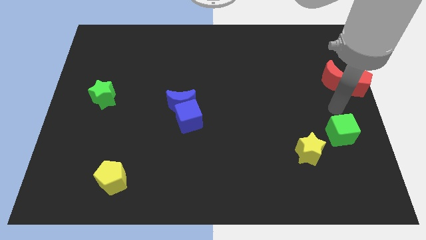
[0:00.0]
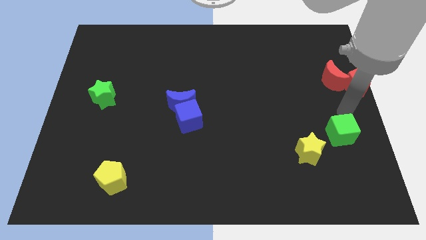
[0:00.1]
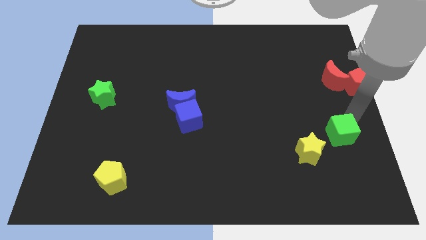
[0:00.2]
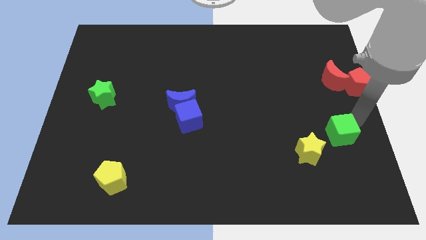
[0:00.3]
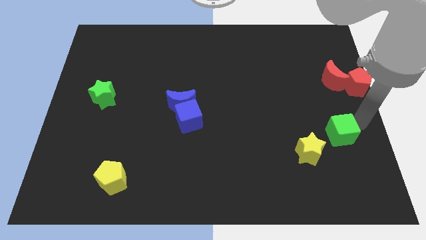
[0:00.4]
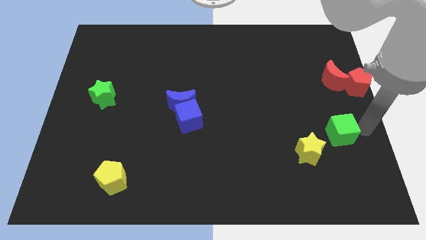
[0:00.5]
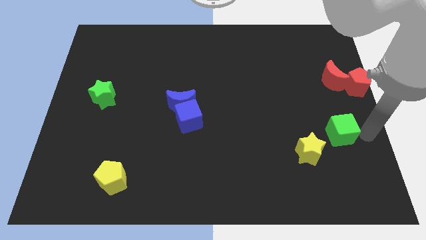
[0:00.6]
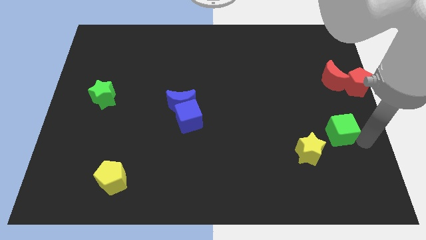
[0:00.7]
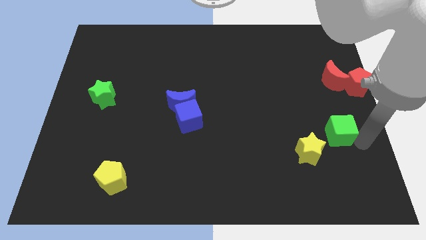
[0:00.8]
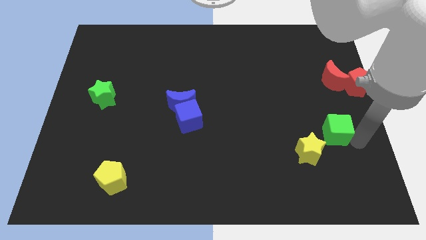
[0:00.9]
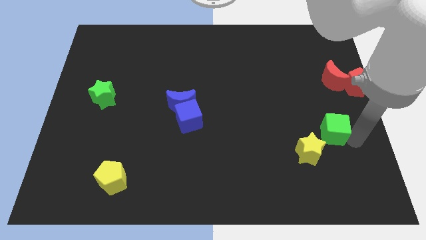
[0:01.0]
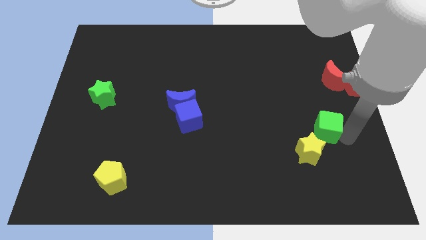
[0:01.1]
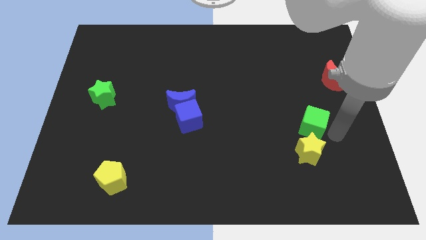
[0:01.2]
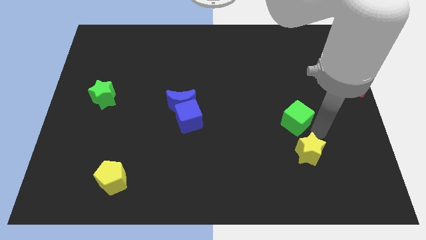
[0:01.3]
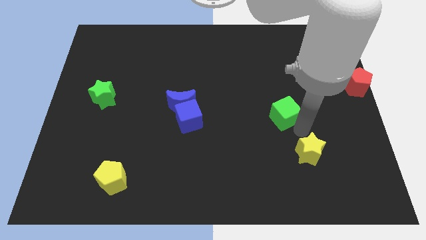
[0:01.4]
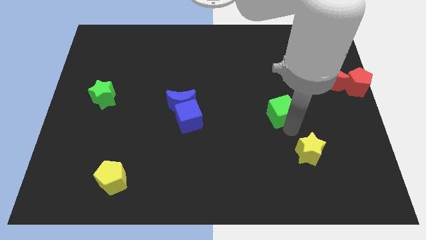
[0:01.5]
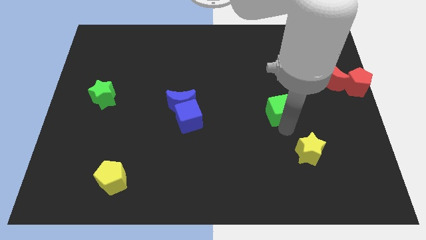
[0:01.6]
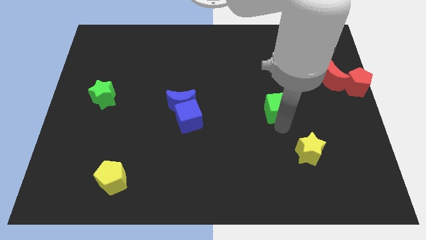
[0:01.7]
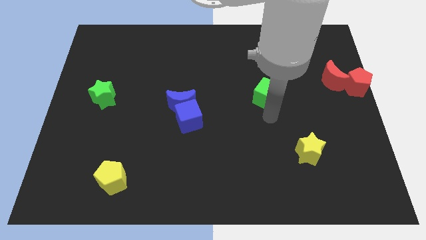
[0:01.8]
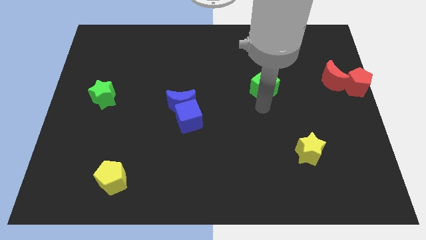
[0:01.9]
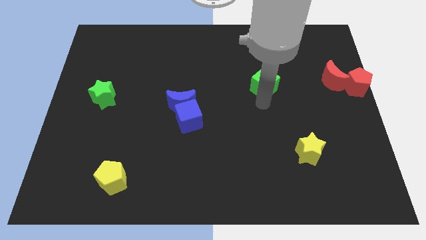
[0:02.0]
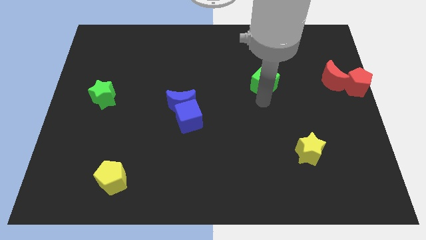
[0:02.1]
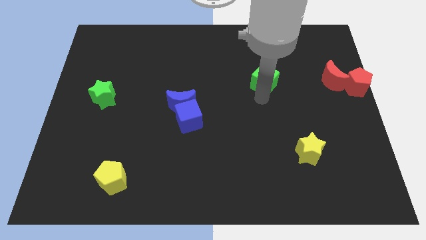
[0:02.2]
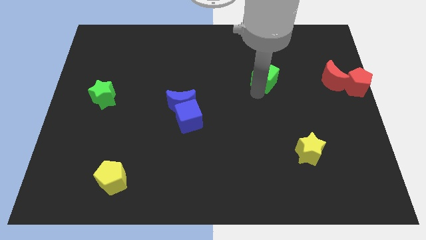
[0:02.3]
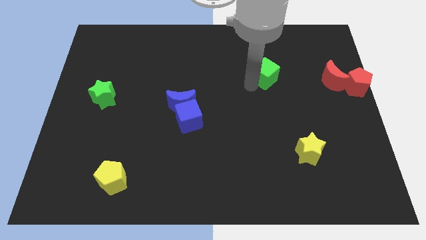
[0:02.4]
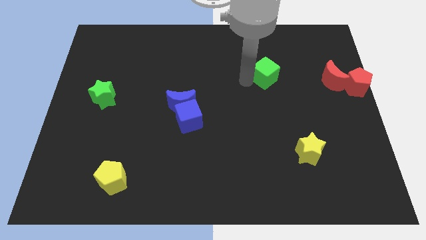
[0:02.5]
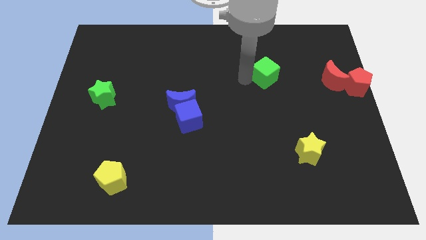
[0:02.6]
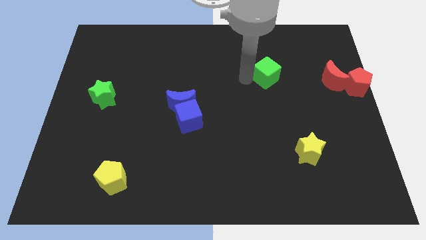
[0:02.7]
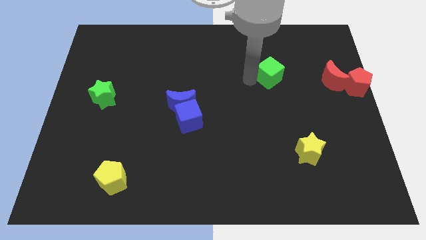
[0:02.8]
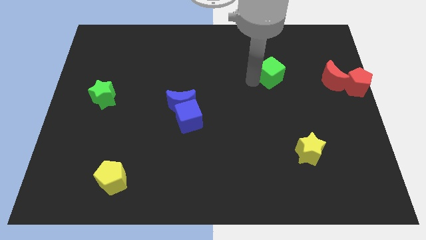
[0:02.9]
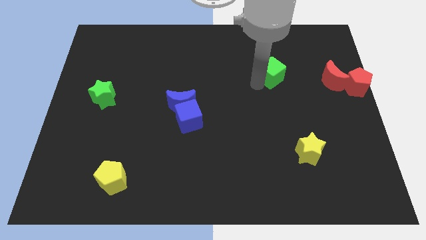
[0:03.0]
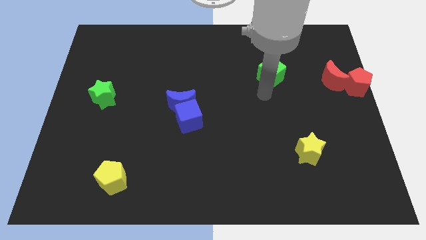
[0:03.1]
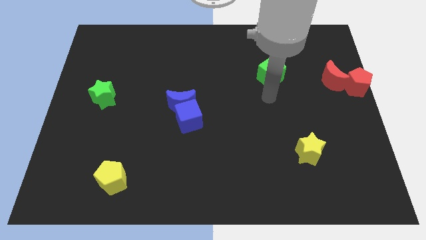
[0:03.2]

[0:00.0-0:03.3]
move the green cube parallel to the red crescent

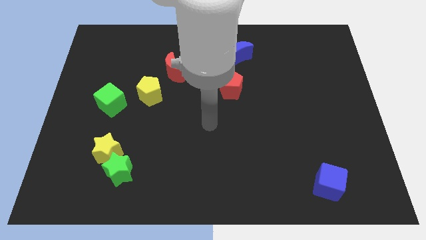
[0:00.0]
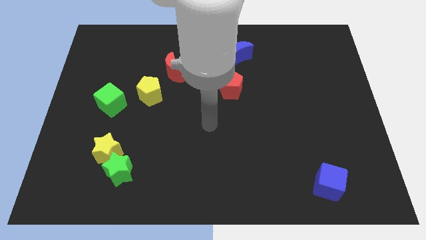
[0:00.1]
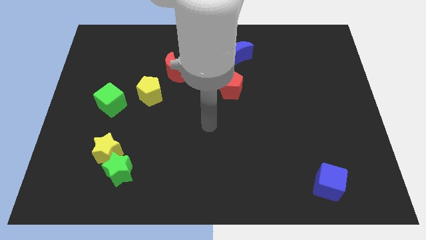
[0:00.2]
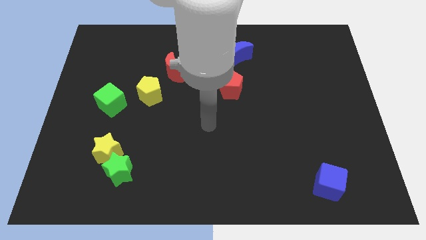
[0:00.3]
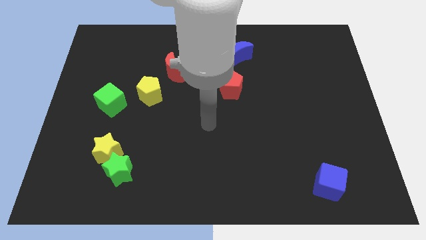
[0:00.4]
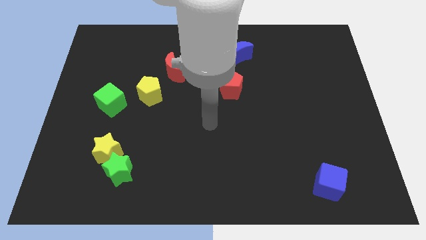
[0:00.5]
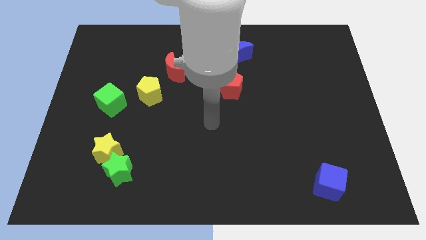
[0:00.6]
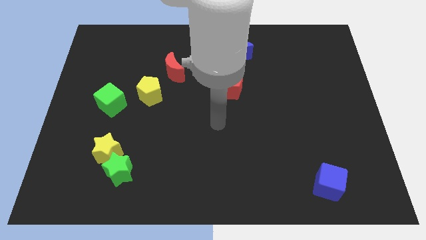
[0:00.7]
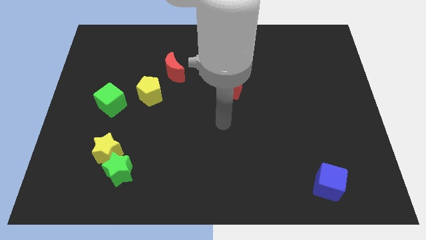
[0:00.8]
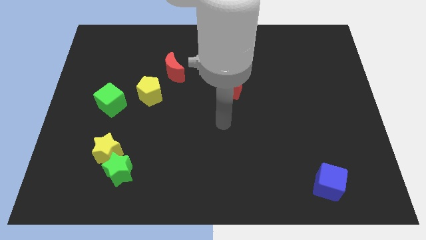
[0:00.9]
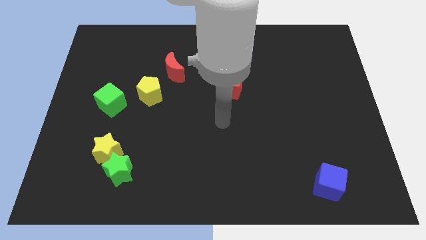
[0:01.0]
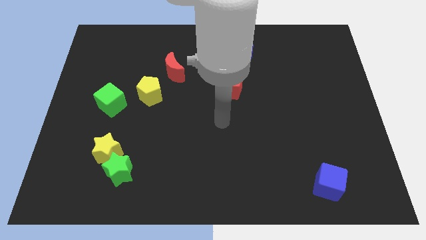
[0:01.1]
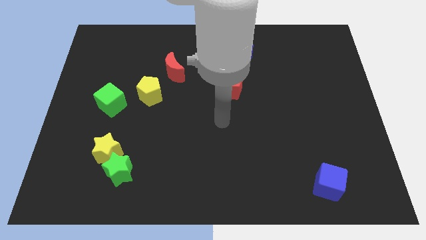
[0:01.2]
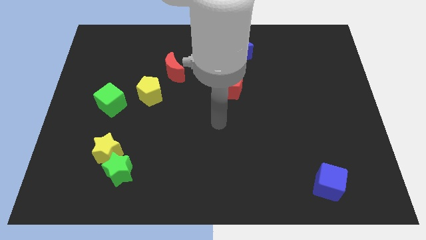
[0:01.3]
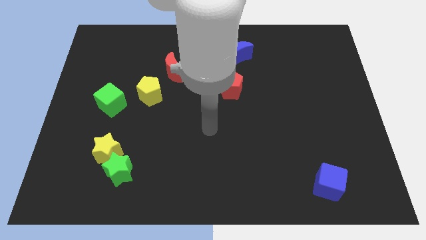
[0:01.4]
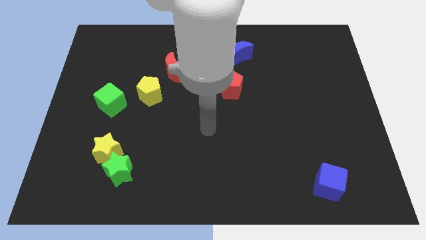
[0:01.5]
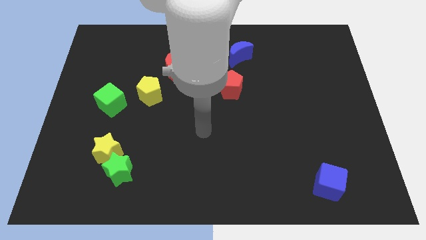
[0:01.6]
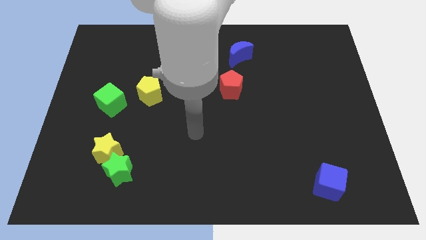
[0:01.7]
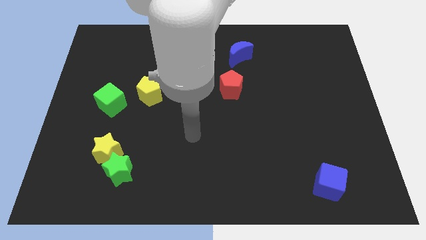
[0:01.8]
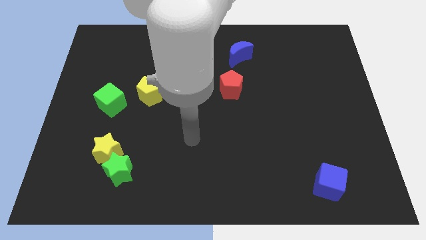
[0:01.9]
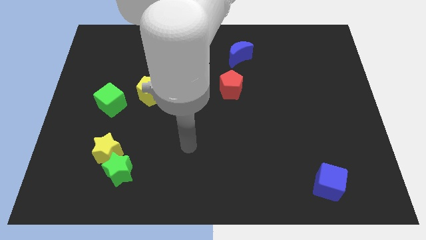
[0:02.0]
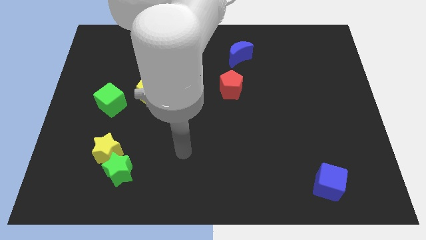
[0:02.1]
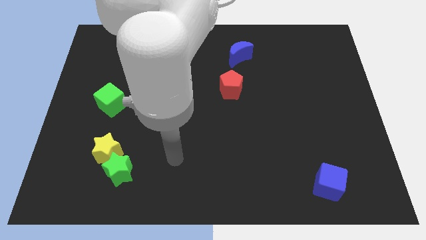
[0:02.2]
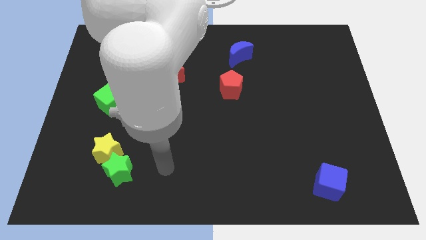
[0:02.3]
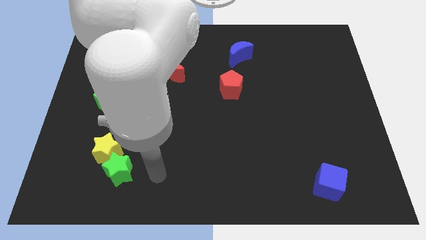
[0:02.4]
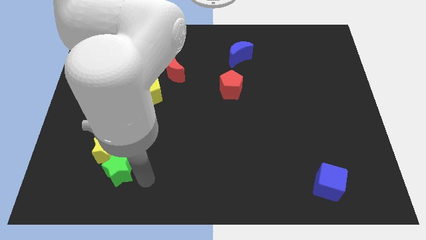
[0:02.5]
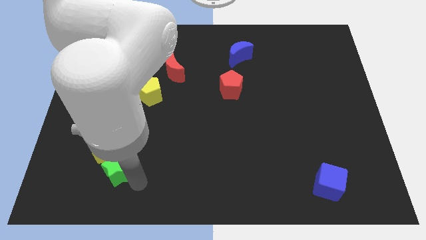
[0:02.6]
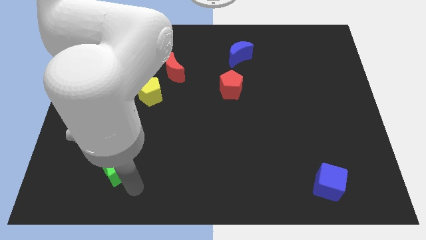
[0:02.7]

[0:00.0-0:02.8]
go near the green star

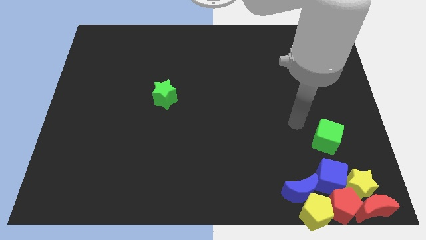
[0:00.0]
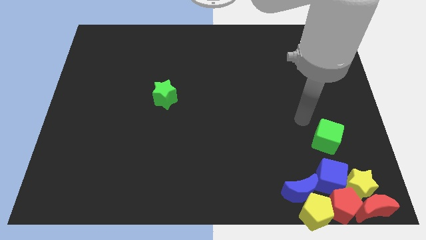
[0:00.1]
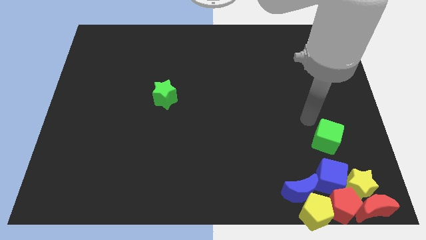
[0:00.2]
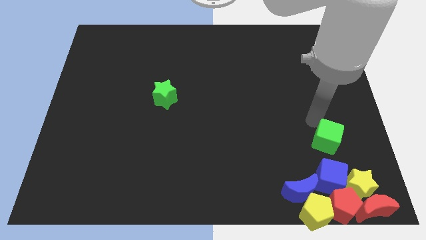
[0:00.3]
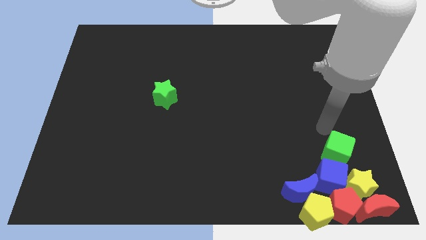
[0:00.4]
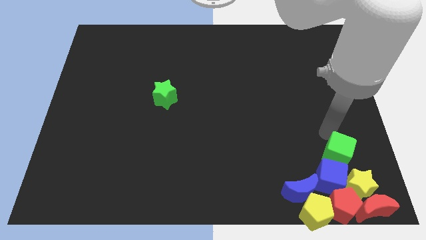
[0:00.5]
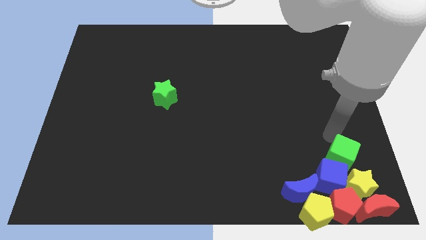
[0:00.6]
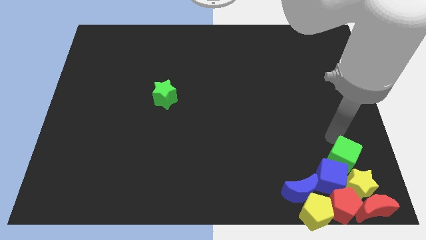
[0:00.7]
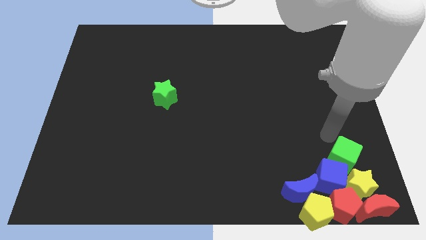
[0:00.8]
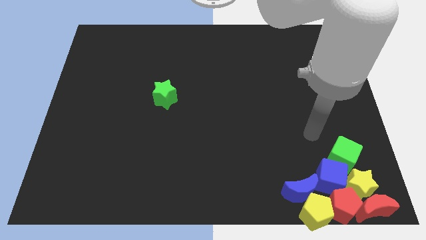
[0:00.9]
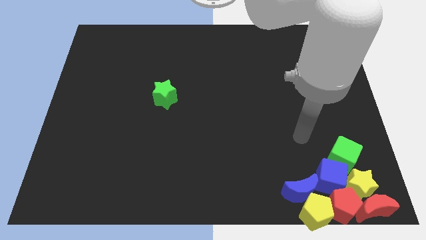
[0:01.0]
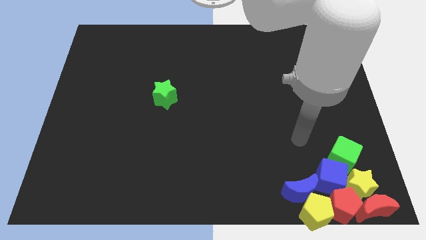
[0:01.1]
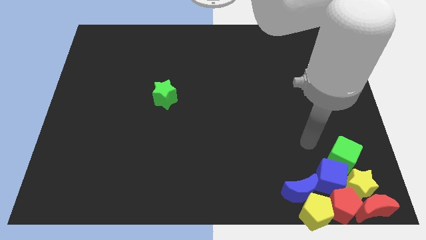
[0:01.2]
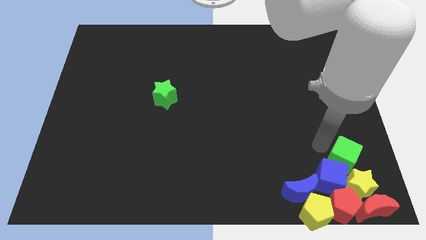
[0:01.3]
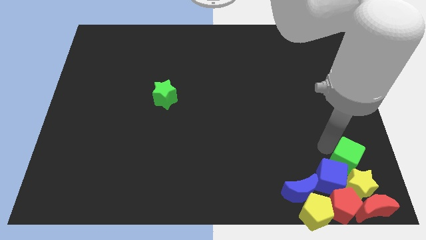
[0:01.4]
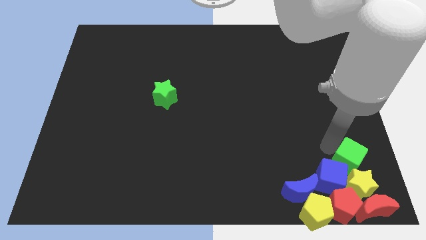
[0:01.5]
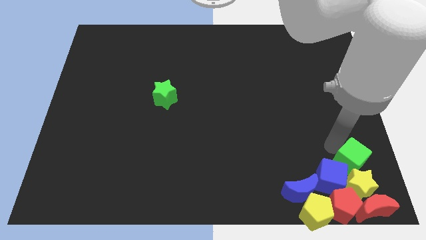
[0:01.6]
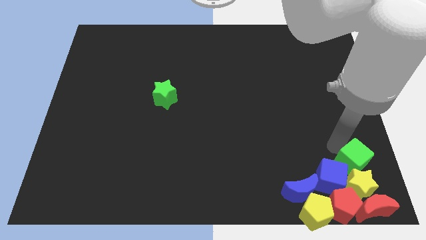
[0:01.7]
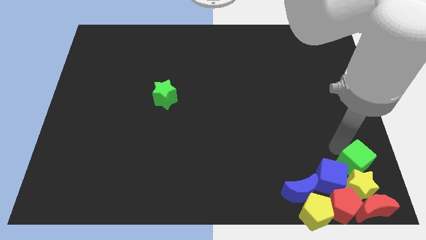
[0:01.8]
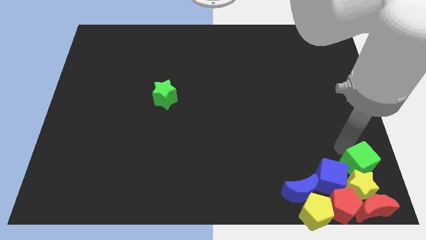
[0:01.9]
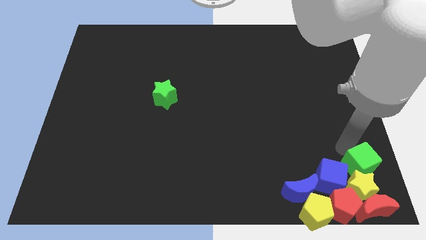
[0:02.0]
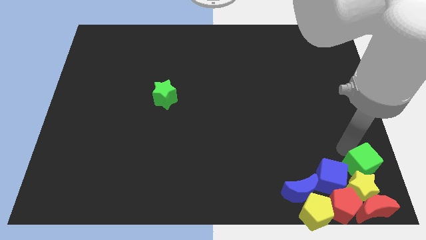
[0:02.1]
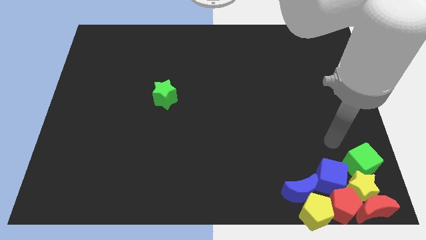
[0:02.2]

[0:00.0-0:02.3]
move the green cube into the yellow star

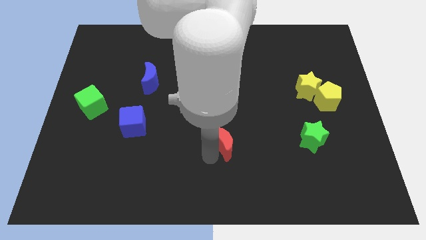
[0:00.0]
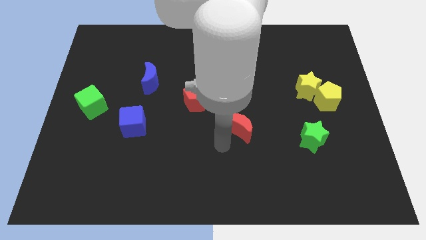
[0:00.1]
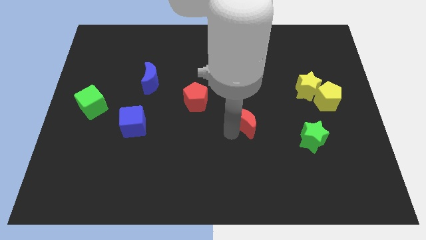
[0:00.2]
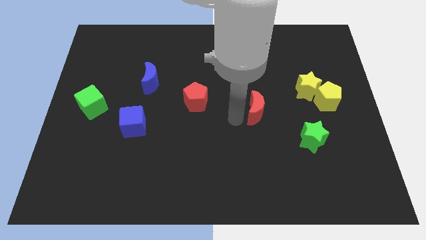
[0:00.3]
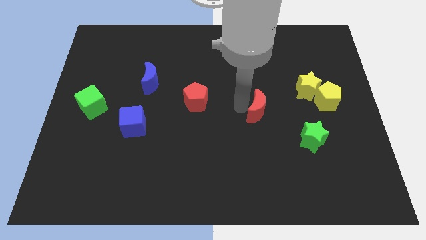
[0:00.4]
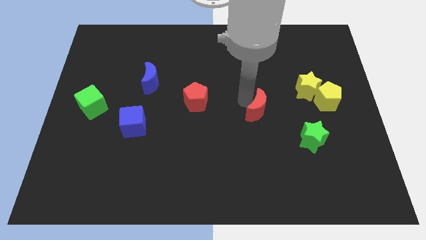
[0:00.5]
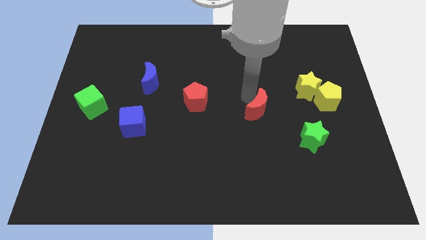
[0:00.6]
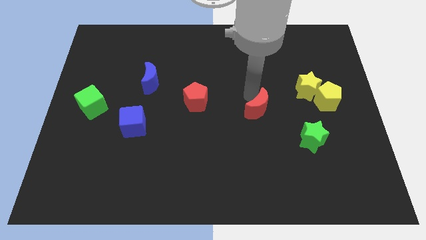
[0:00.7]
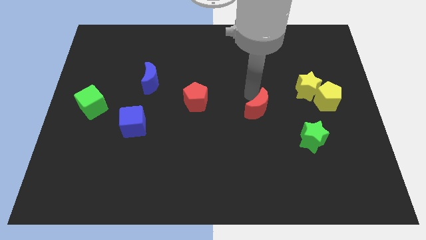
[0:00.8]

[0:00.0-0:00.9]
push the red crescent right to the red pentagon
